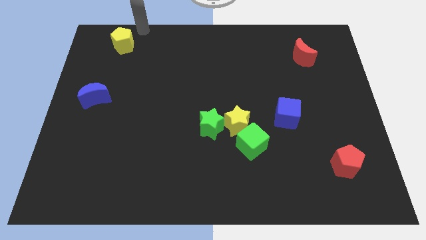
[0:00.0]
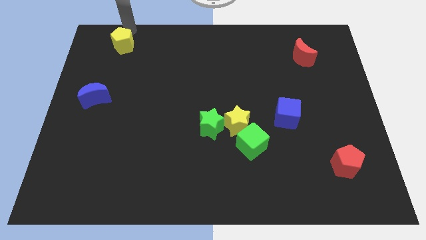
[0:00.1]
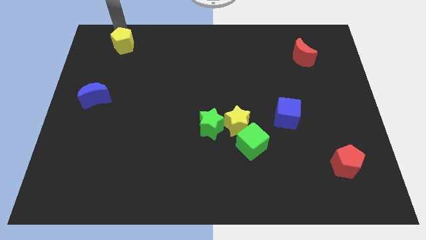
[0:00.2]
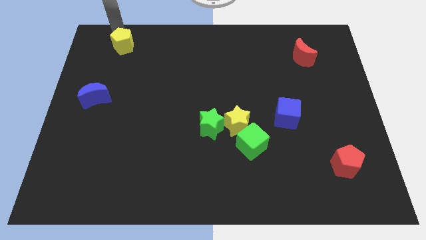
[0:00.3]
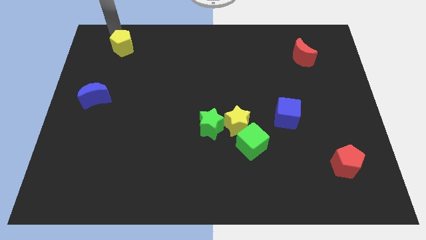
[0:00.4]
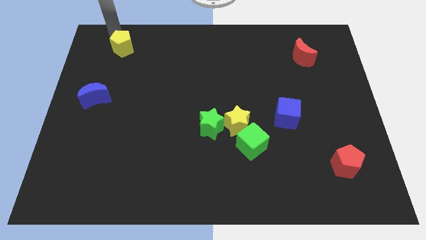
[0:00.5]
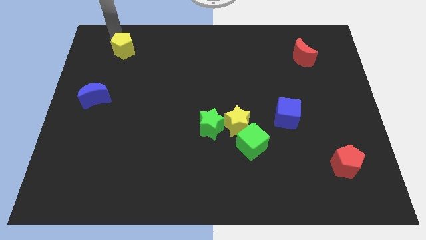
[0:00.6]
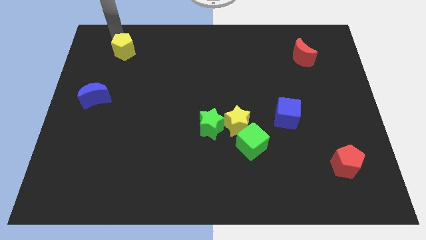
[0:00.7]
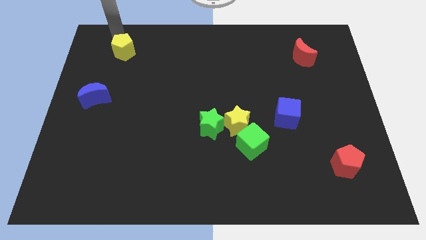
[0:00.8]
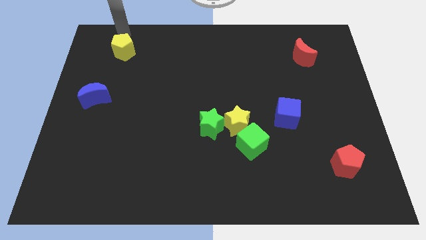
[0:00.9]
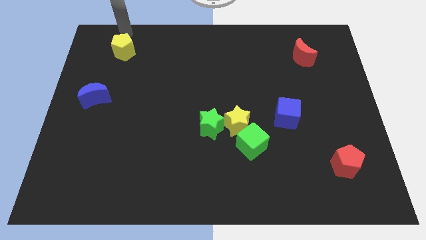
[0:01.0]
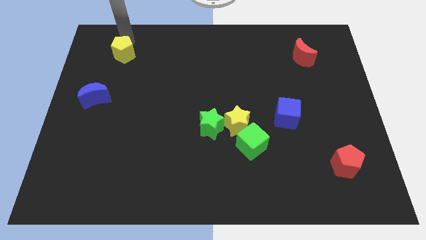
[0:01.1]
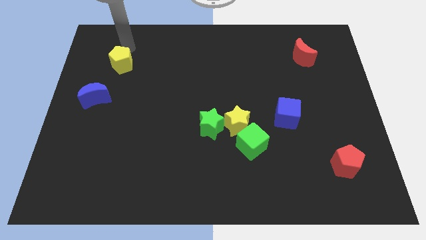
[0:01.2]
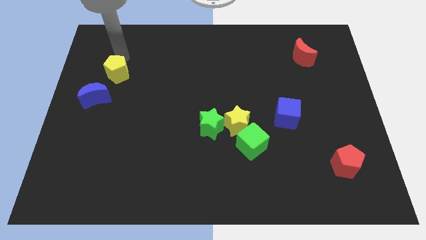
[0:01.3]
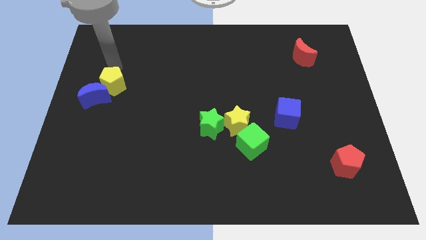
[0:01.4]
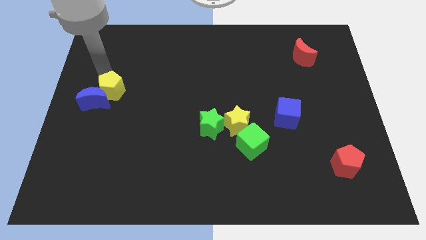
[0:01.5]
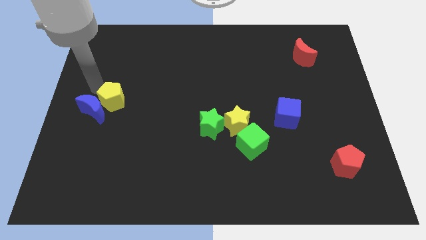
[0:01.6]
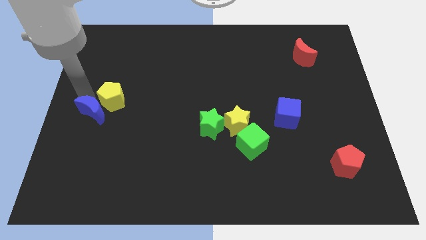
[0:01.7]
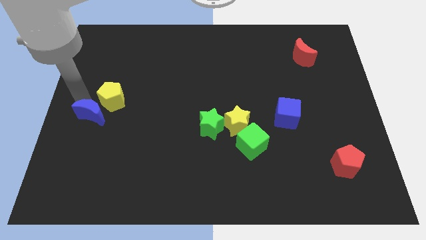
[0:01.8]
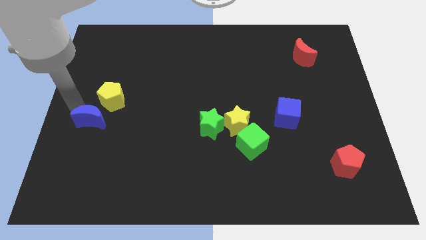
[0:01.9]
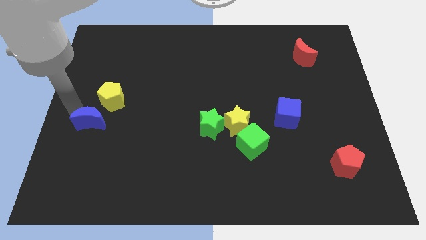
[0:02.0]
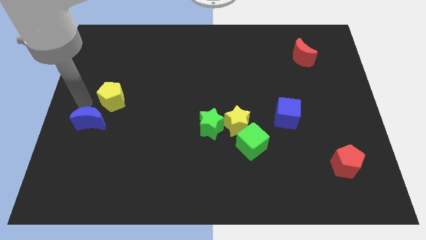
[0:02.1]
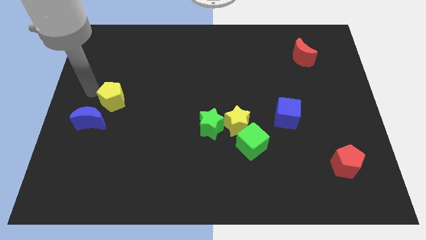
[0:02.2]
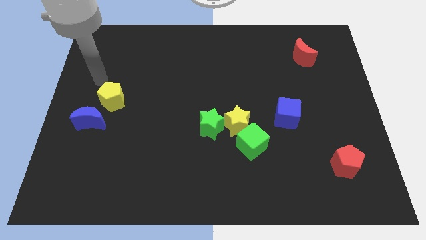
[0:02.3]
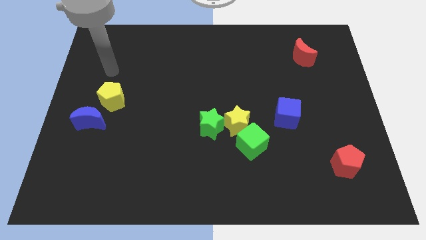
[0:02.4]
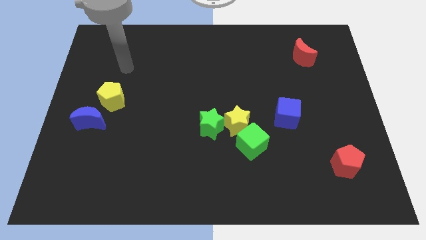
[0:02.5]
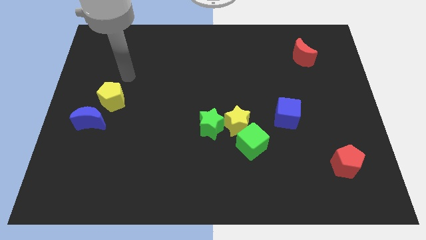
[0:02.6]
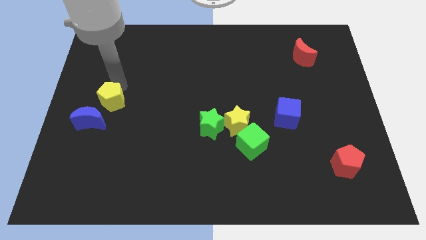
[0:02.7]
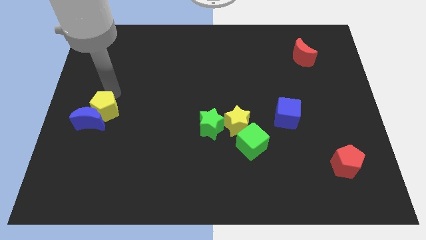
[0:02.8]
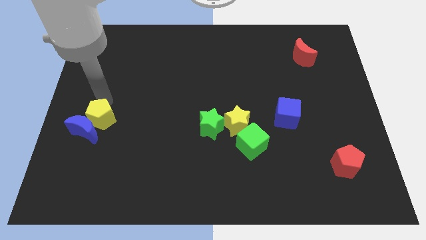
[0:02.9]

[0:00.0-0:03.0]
push the yellow pentagon into the top of the blue moon

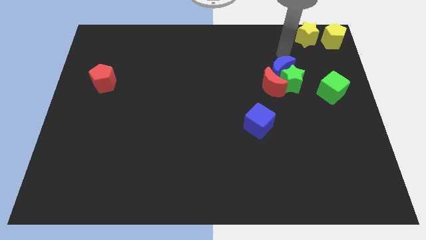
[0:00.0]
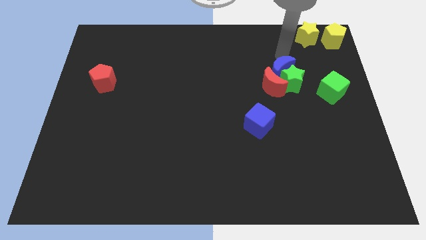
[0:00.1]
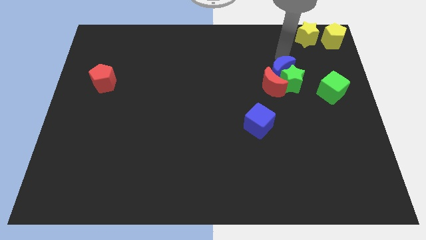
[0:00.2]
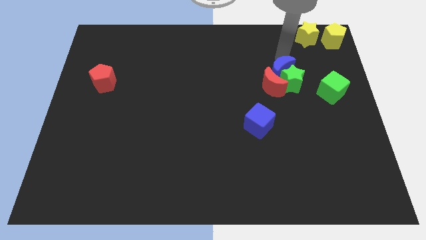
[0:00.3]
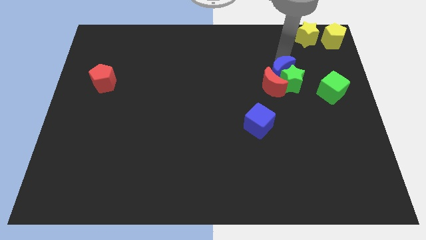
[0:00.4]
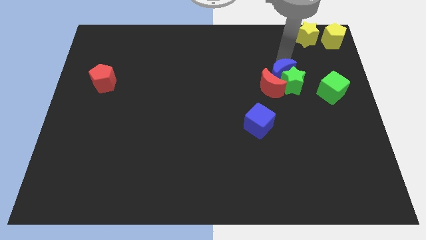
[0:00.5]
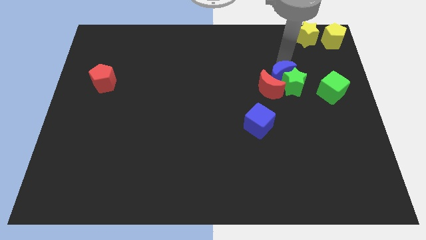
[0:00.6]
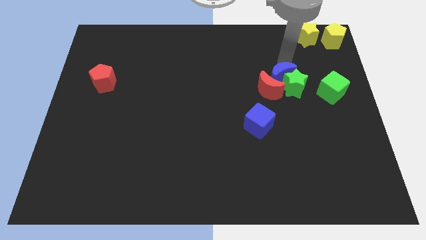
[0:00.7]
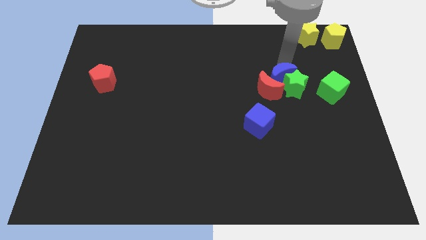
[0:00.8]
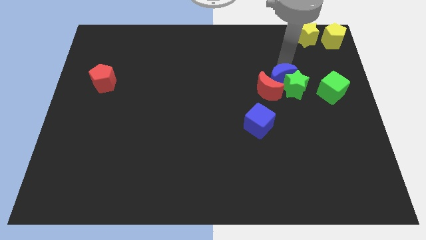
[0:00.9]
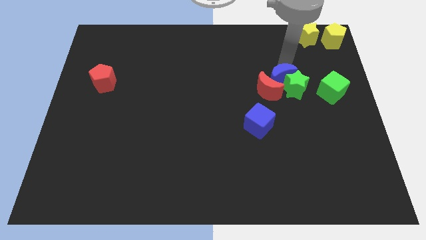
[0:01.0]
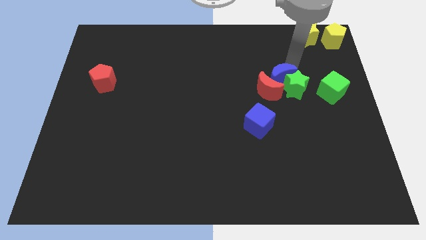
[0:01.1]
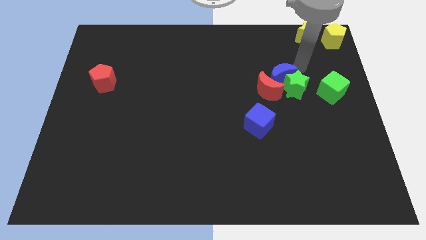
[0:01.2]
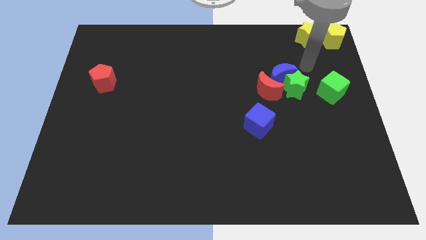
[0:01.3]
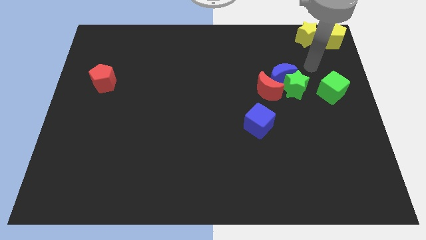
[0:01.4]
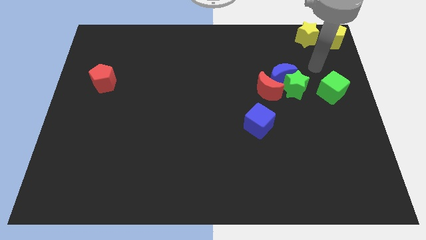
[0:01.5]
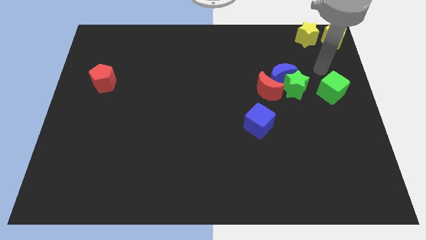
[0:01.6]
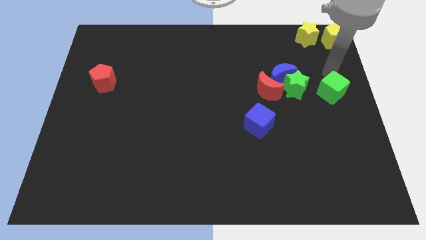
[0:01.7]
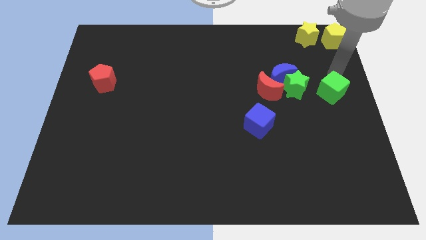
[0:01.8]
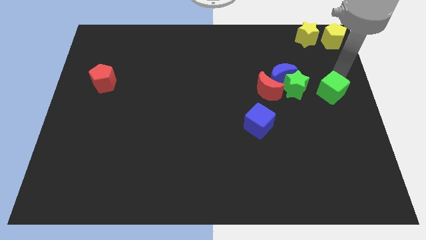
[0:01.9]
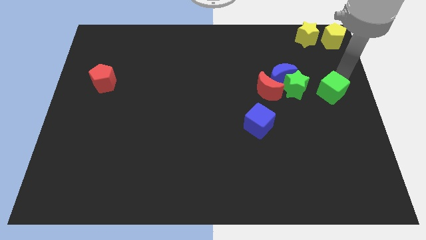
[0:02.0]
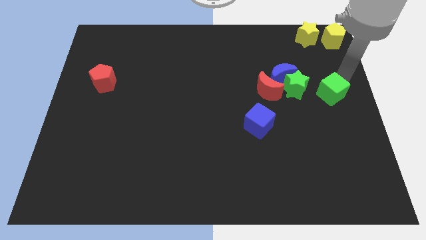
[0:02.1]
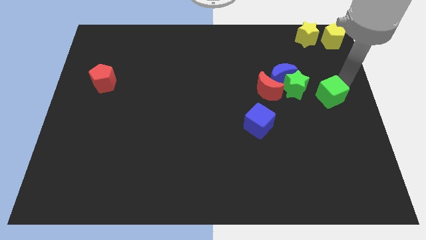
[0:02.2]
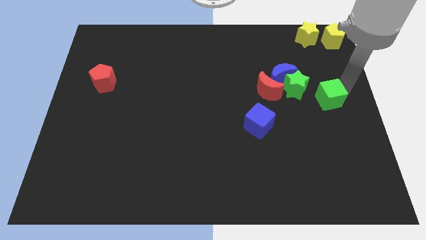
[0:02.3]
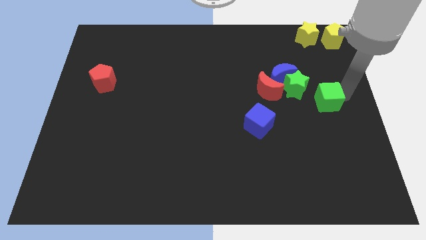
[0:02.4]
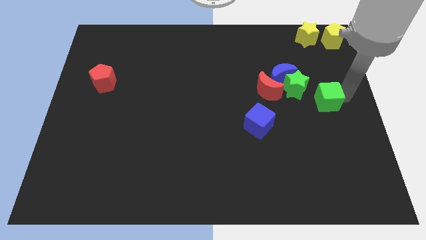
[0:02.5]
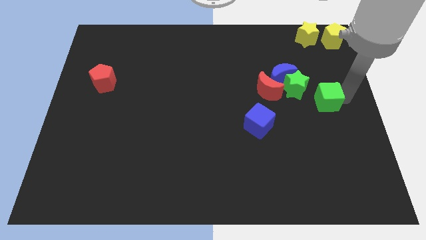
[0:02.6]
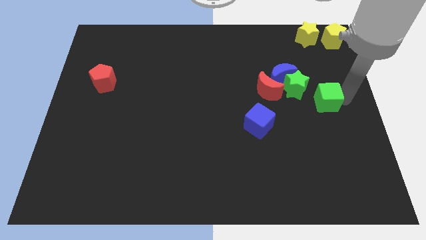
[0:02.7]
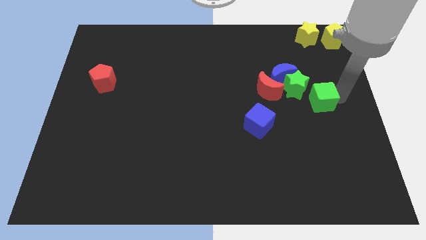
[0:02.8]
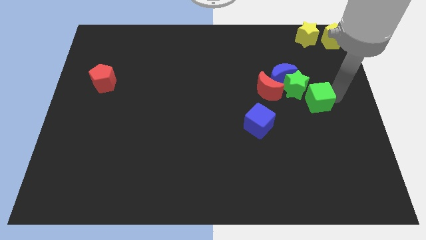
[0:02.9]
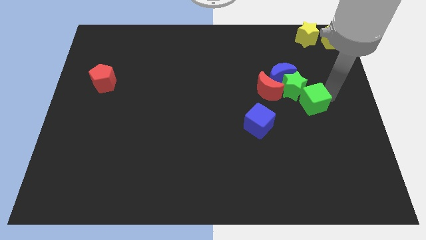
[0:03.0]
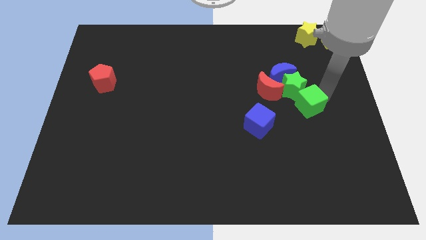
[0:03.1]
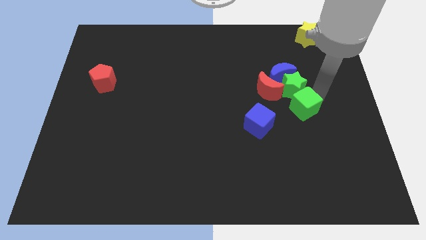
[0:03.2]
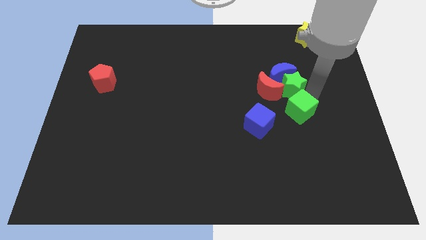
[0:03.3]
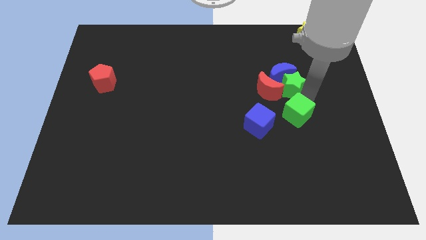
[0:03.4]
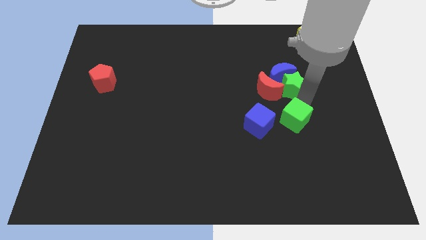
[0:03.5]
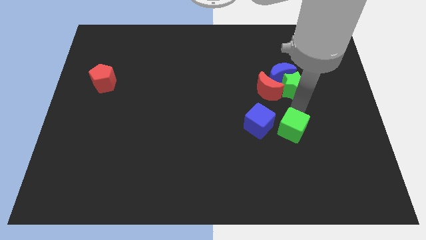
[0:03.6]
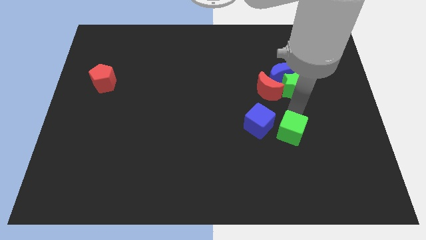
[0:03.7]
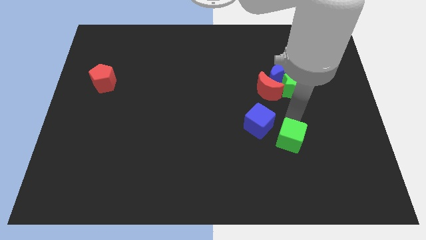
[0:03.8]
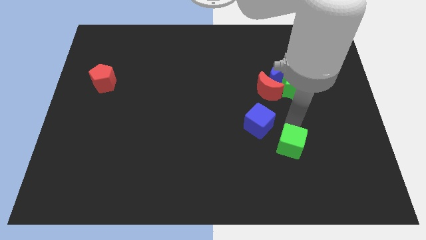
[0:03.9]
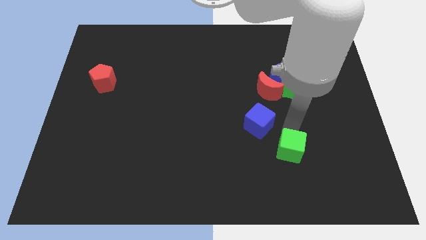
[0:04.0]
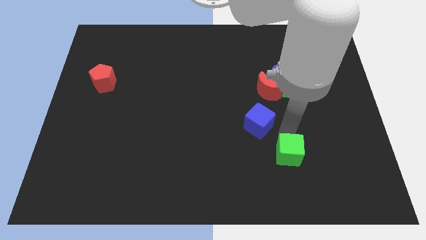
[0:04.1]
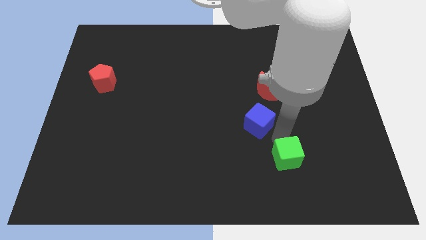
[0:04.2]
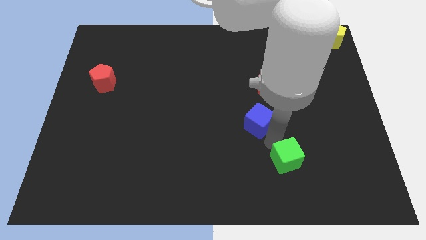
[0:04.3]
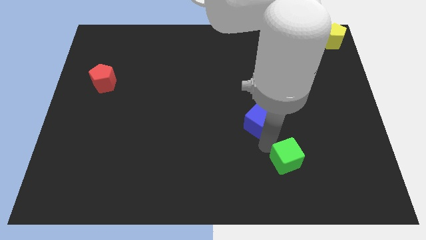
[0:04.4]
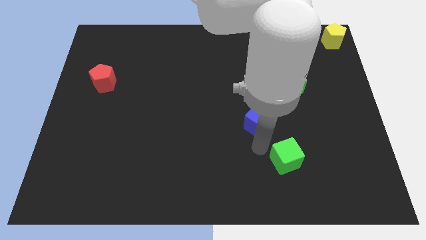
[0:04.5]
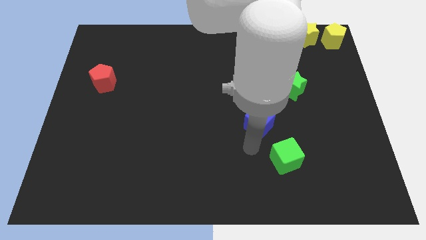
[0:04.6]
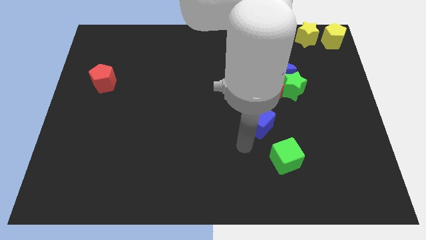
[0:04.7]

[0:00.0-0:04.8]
move the green cube towards the bottom center of the board

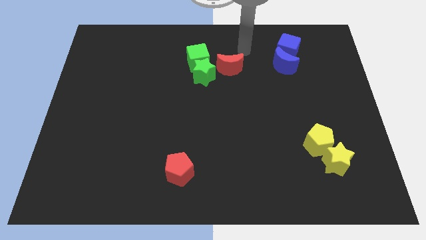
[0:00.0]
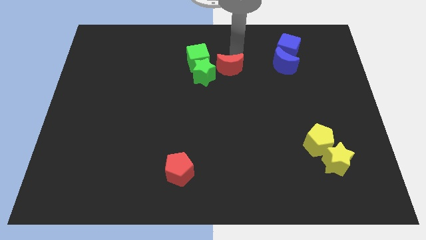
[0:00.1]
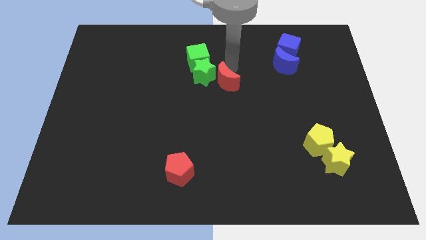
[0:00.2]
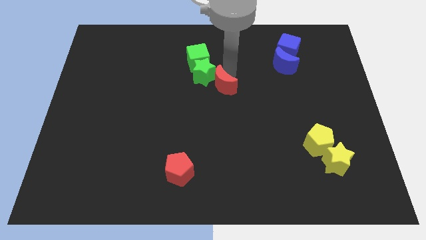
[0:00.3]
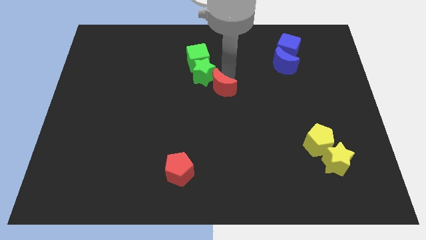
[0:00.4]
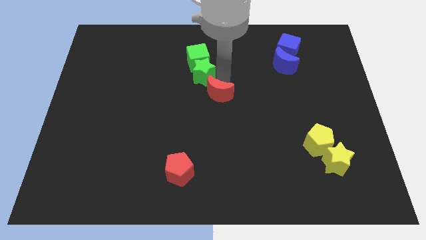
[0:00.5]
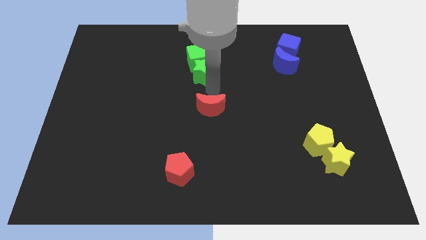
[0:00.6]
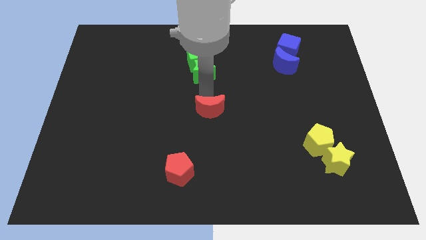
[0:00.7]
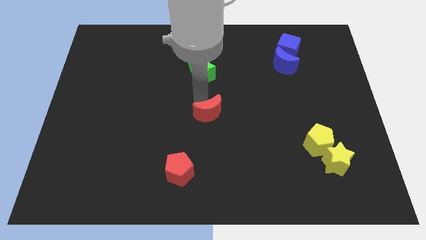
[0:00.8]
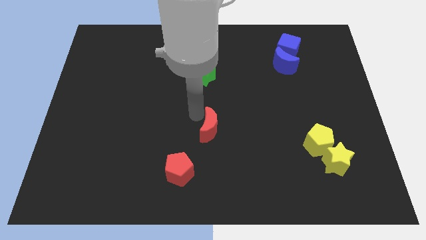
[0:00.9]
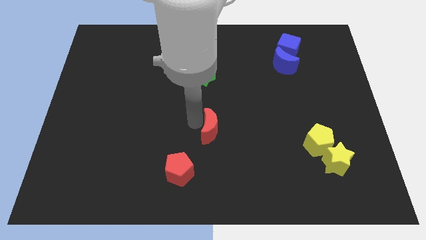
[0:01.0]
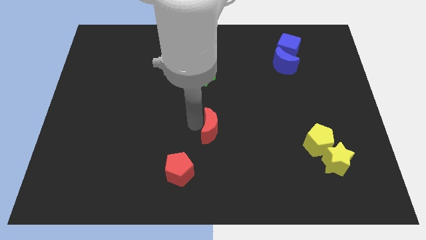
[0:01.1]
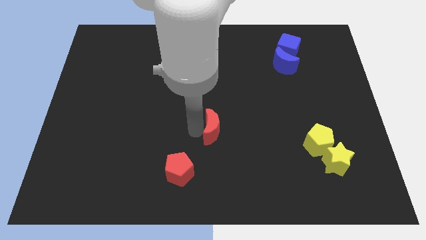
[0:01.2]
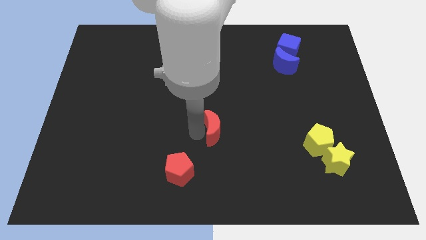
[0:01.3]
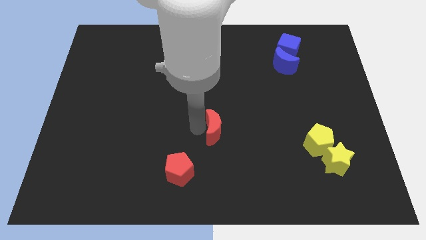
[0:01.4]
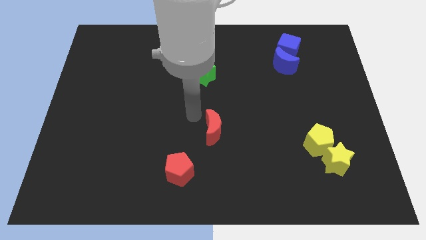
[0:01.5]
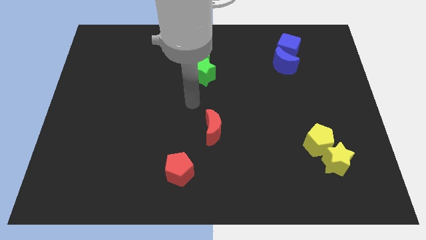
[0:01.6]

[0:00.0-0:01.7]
move the red moon slightly downwards to the board
